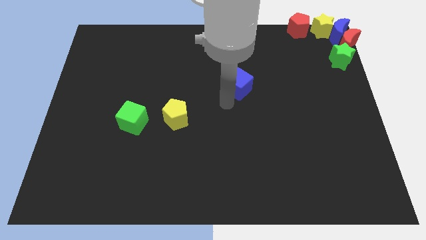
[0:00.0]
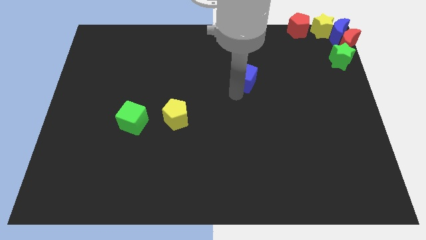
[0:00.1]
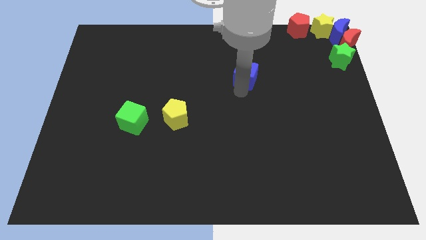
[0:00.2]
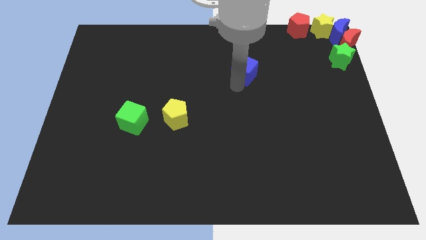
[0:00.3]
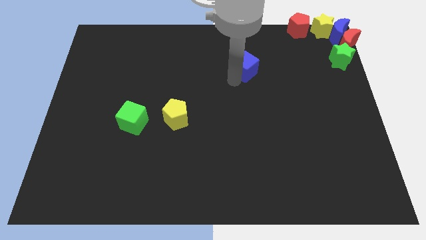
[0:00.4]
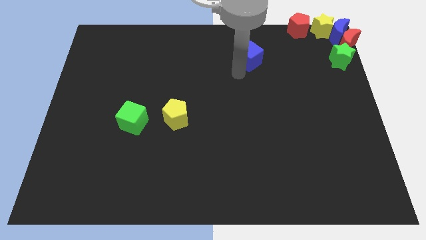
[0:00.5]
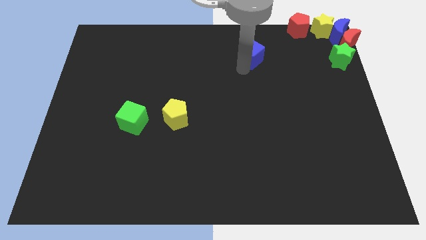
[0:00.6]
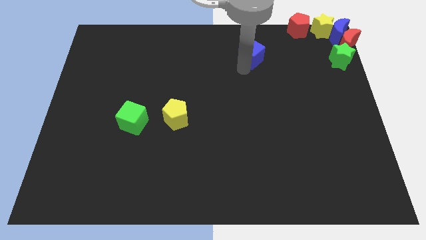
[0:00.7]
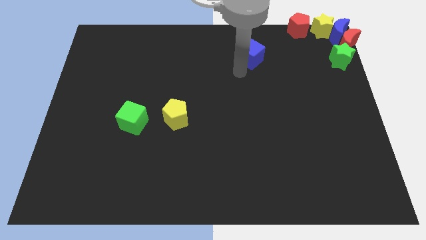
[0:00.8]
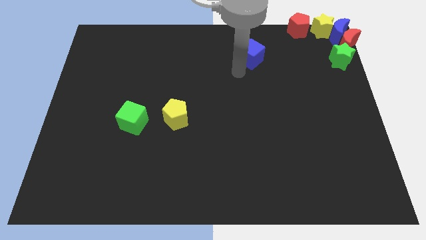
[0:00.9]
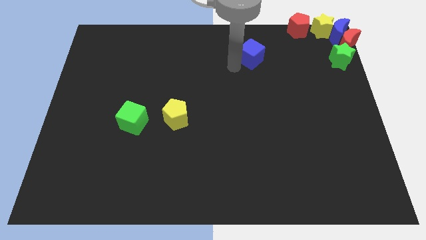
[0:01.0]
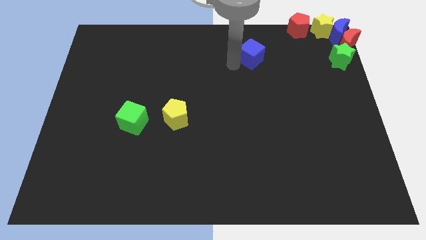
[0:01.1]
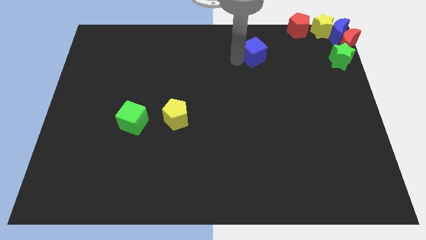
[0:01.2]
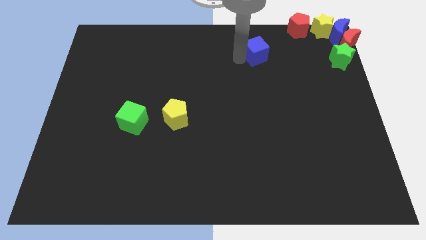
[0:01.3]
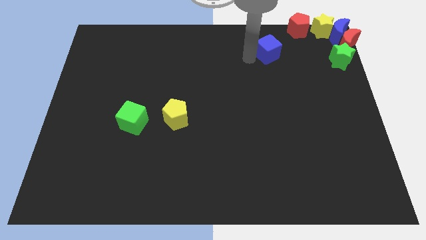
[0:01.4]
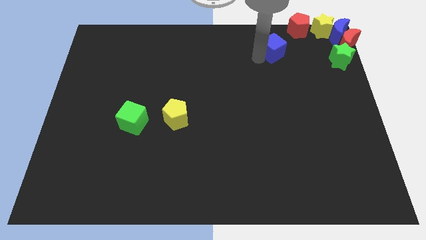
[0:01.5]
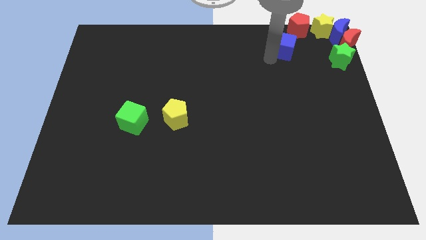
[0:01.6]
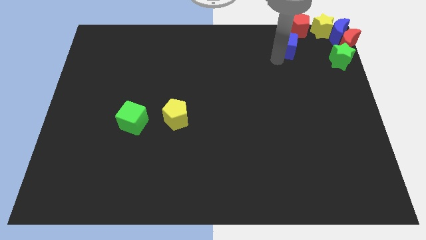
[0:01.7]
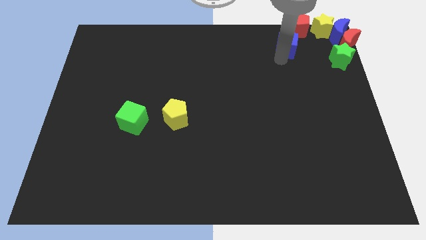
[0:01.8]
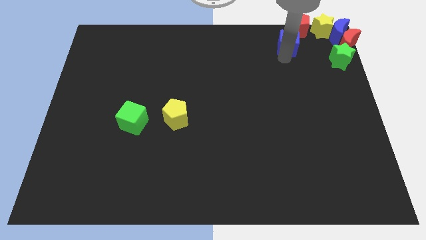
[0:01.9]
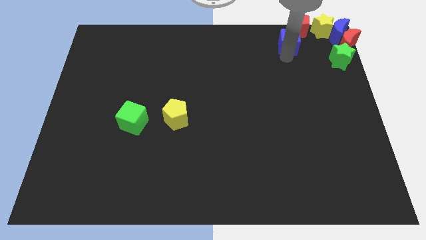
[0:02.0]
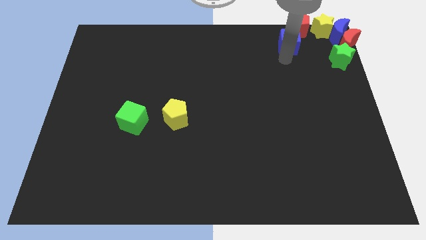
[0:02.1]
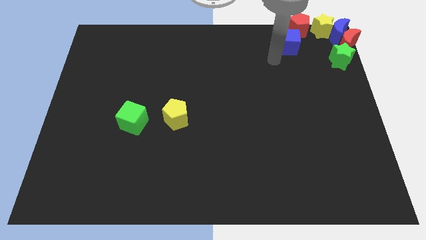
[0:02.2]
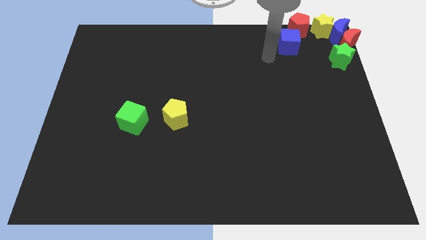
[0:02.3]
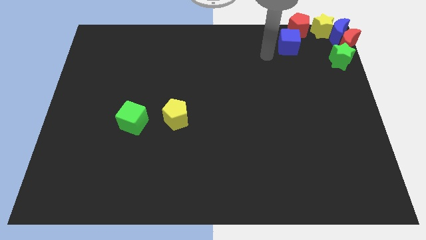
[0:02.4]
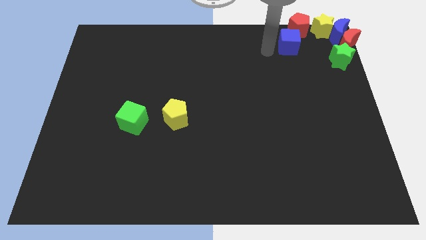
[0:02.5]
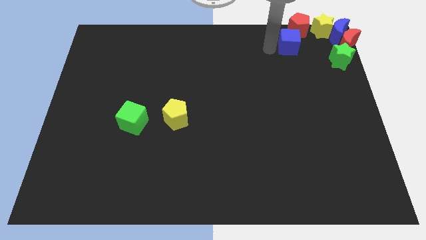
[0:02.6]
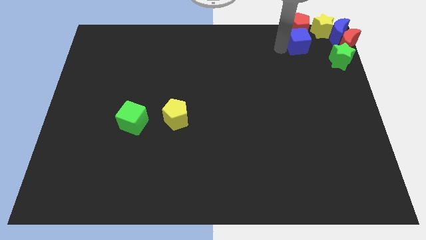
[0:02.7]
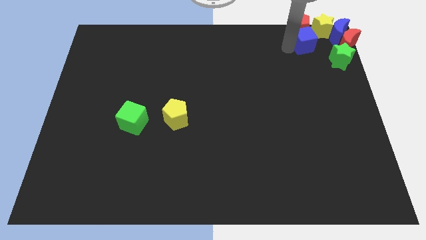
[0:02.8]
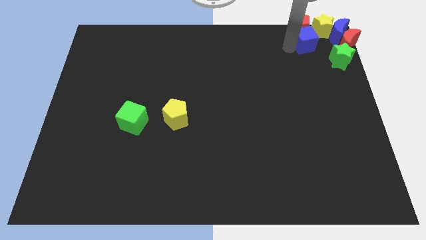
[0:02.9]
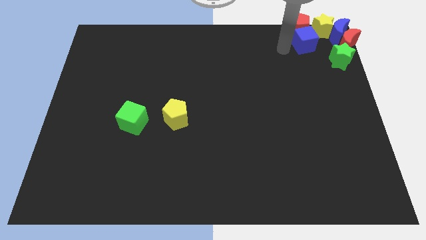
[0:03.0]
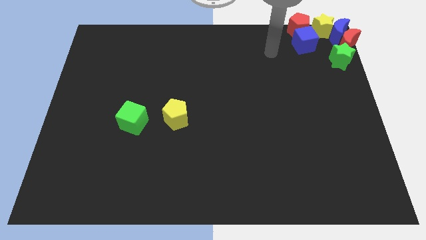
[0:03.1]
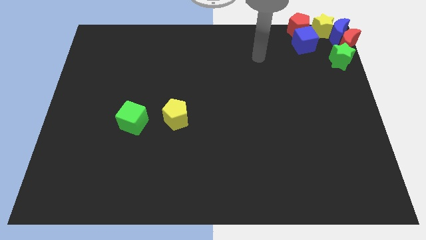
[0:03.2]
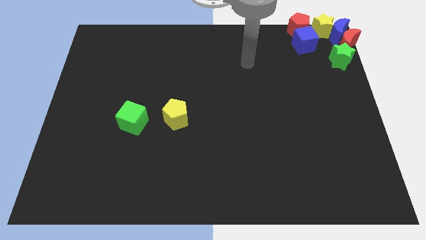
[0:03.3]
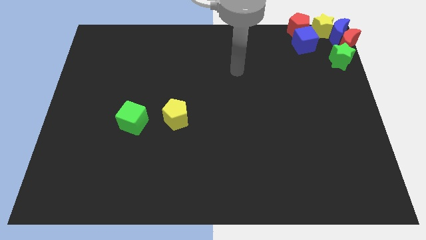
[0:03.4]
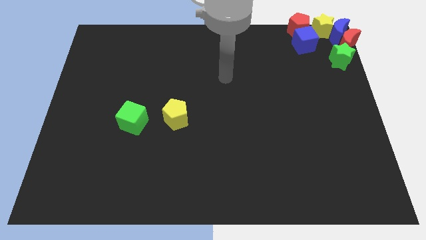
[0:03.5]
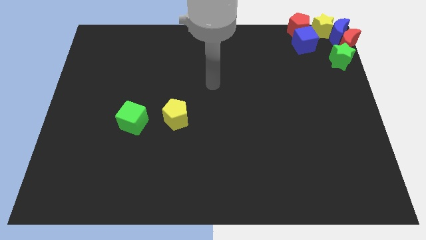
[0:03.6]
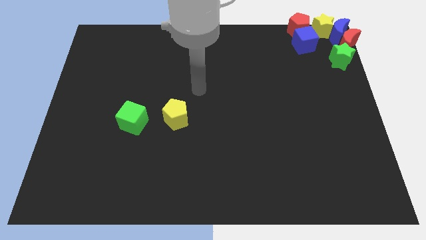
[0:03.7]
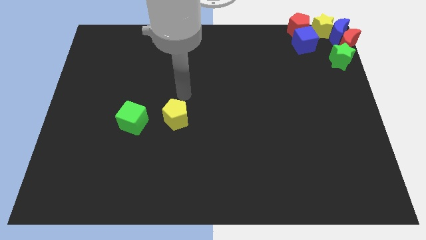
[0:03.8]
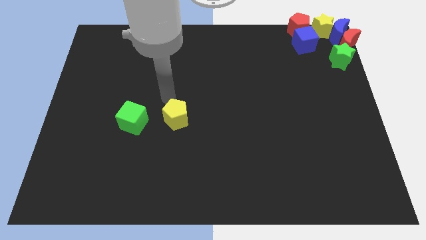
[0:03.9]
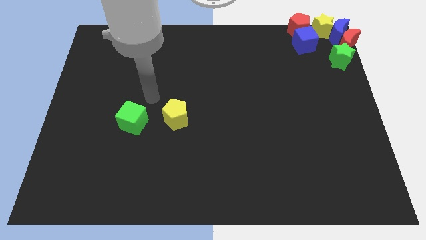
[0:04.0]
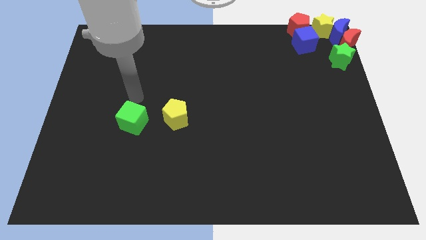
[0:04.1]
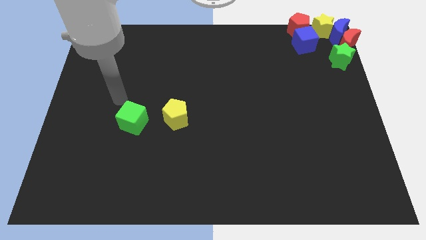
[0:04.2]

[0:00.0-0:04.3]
drag the blue cube below the red pentagon

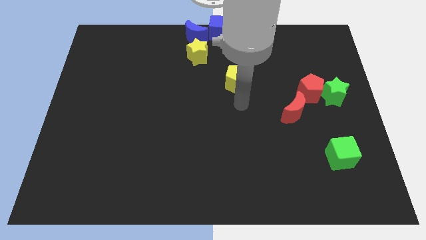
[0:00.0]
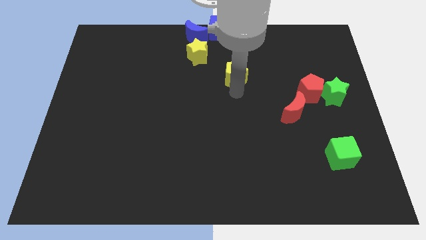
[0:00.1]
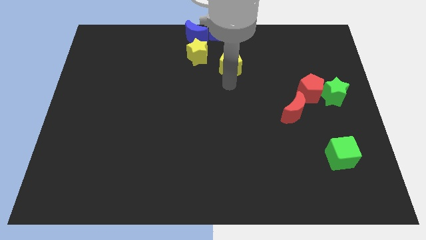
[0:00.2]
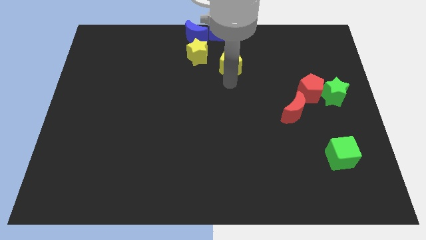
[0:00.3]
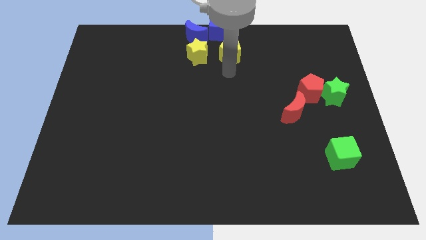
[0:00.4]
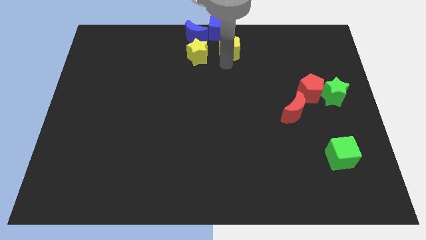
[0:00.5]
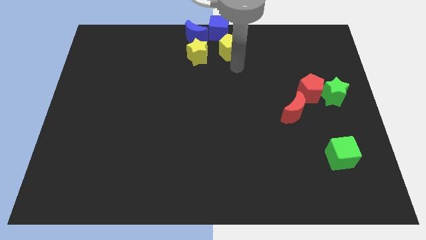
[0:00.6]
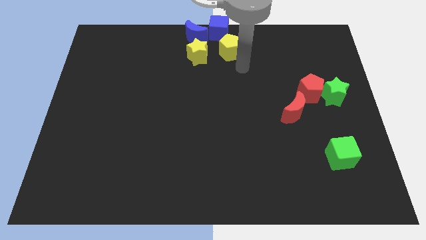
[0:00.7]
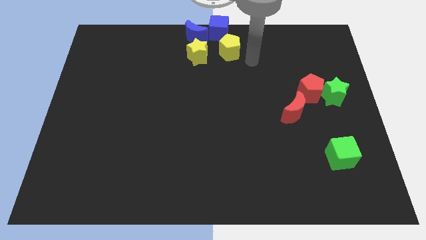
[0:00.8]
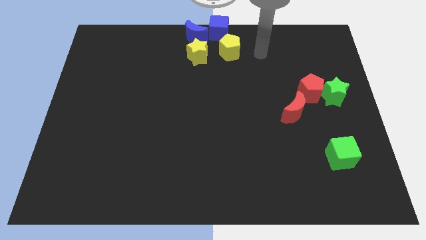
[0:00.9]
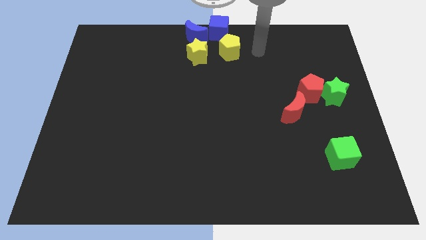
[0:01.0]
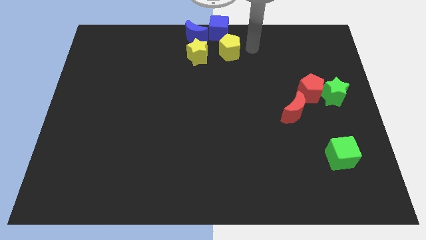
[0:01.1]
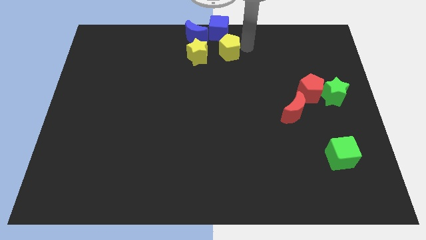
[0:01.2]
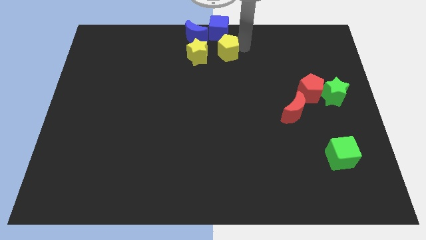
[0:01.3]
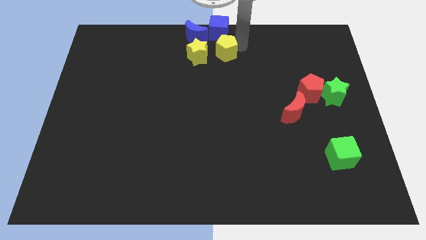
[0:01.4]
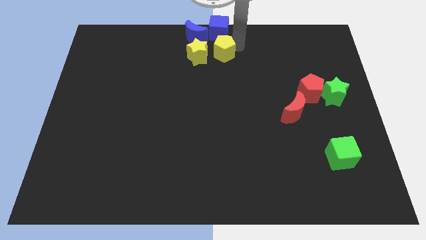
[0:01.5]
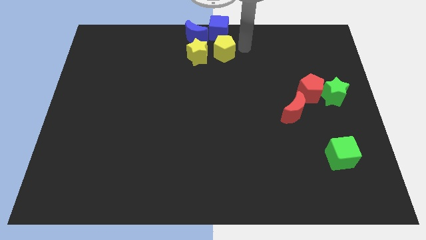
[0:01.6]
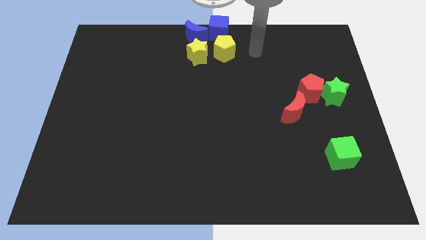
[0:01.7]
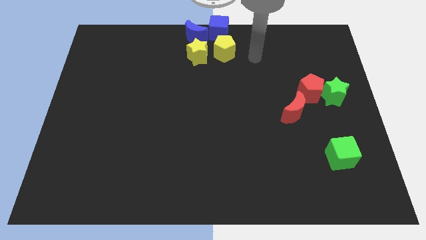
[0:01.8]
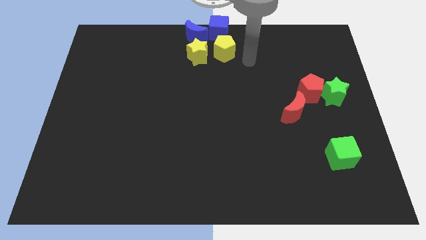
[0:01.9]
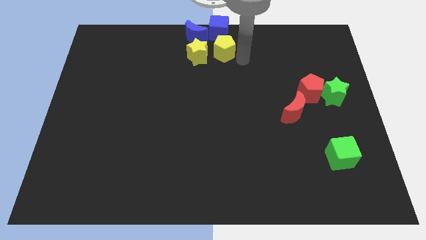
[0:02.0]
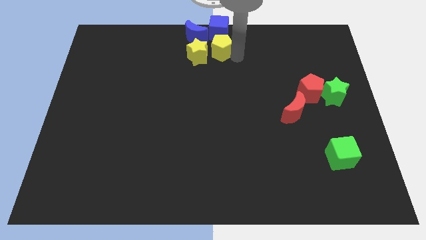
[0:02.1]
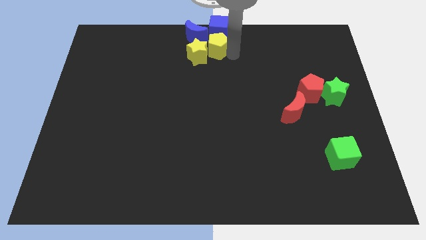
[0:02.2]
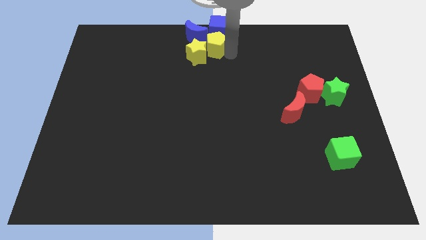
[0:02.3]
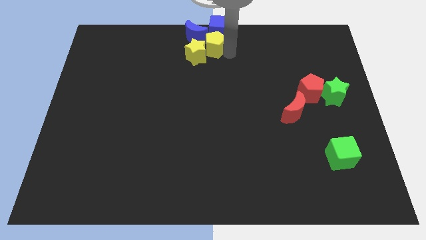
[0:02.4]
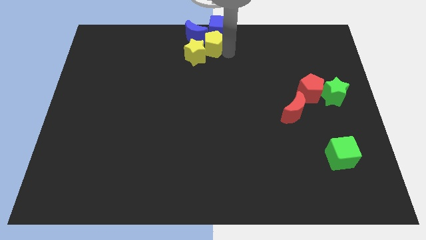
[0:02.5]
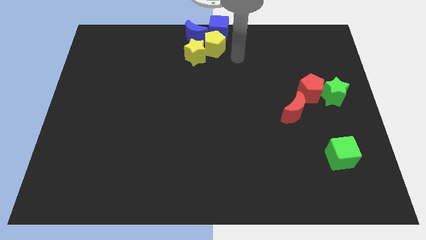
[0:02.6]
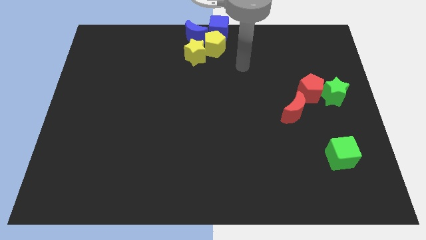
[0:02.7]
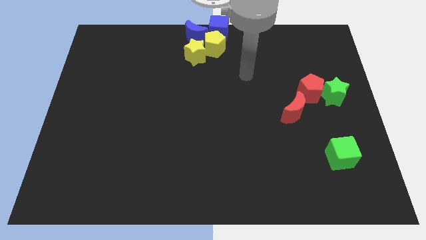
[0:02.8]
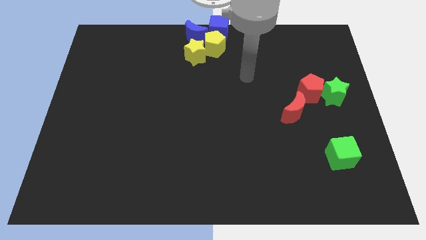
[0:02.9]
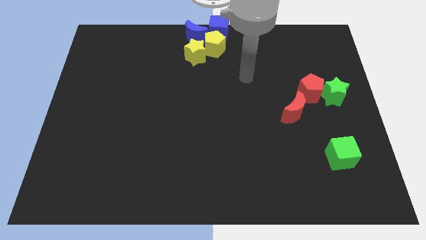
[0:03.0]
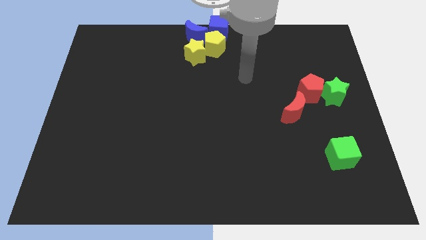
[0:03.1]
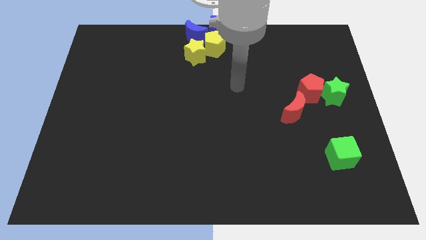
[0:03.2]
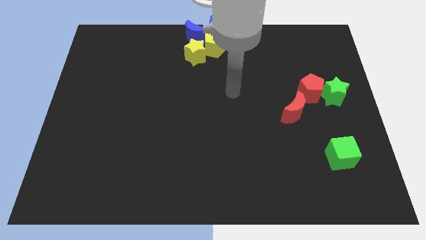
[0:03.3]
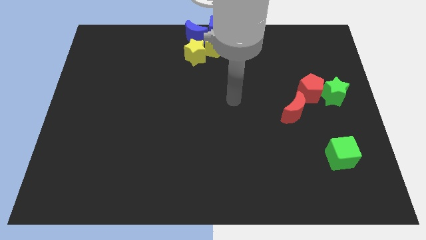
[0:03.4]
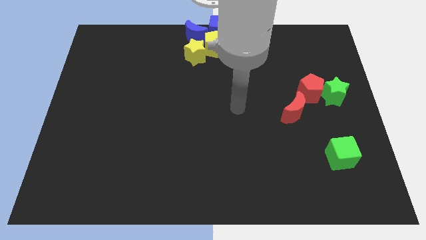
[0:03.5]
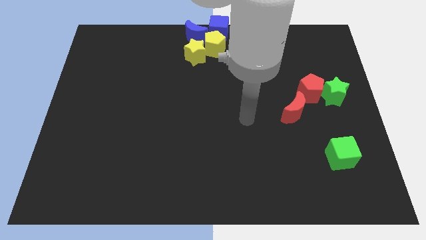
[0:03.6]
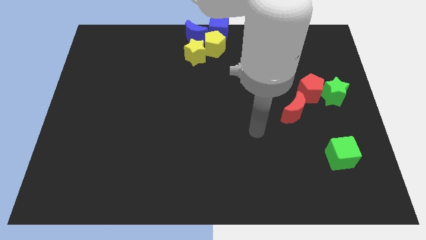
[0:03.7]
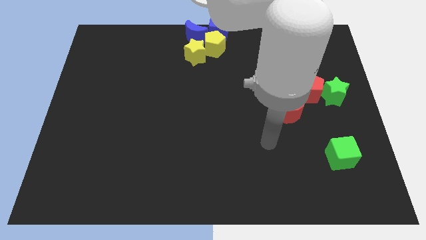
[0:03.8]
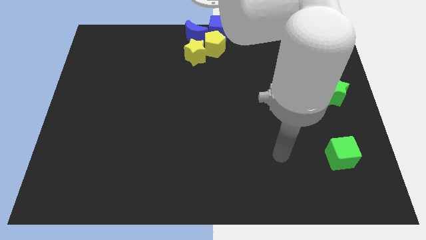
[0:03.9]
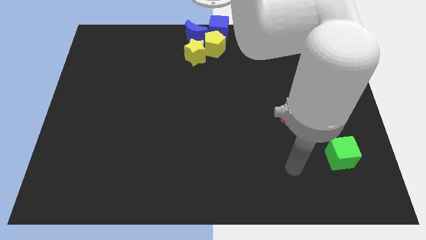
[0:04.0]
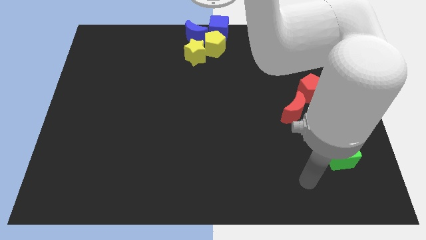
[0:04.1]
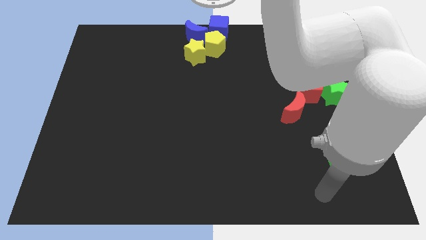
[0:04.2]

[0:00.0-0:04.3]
adjust the yellow blocks at the top center of the board

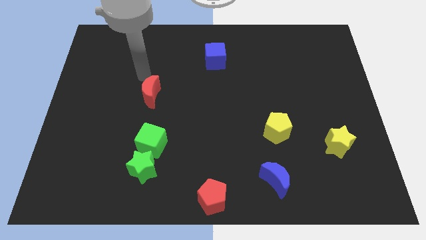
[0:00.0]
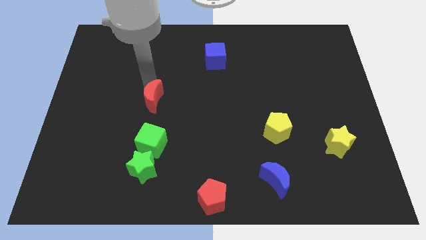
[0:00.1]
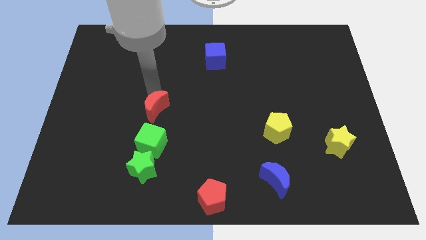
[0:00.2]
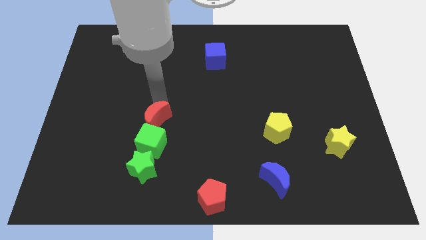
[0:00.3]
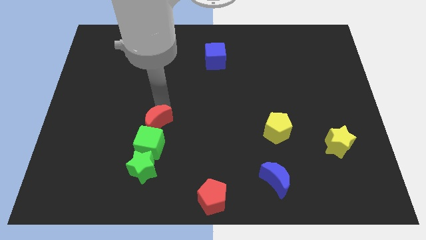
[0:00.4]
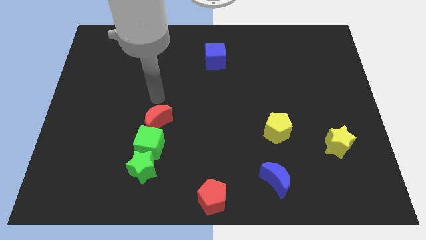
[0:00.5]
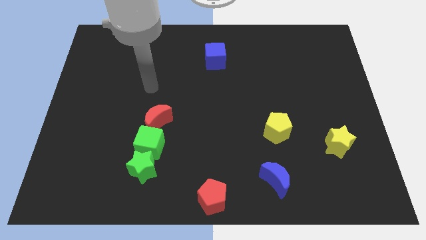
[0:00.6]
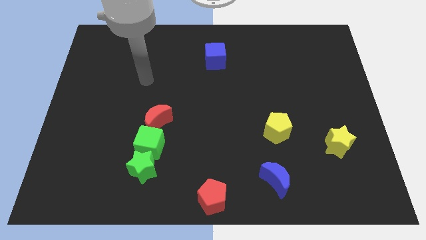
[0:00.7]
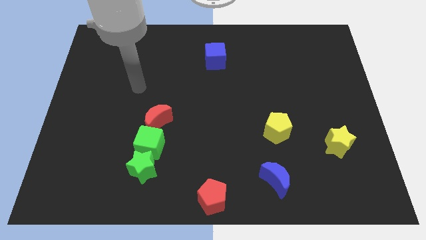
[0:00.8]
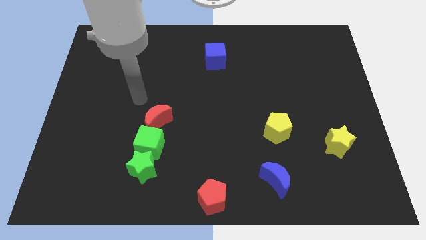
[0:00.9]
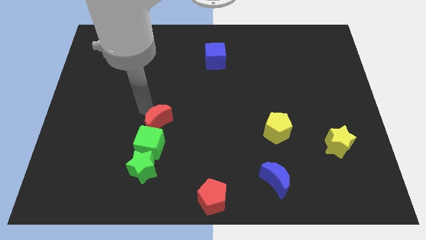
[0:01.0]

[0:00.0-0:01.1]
touch green cube with red crescent
